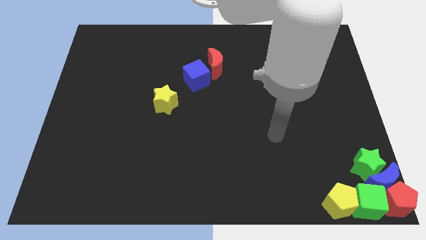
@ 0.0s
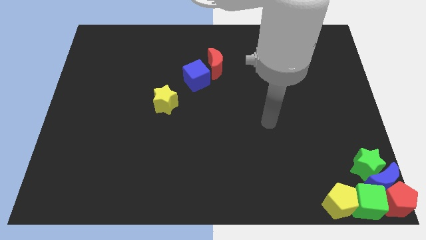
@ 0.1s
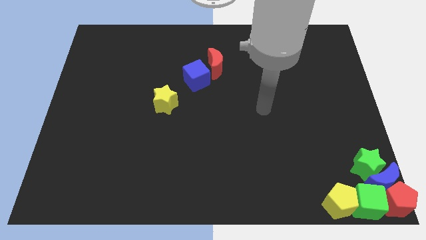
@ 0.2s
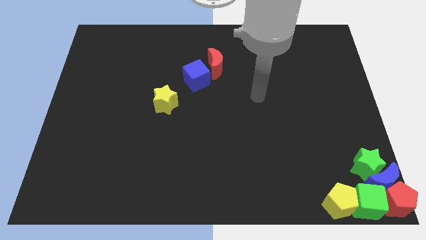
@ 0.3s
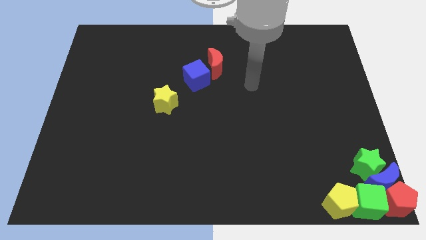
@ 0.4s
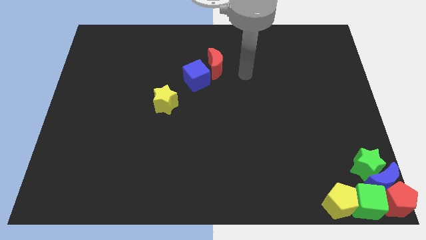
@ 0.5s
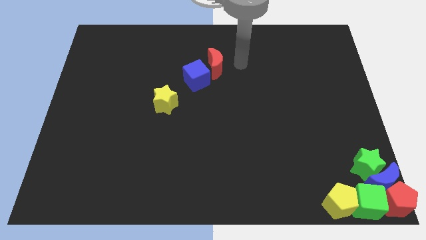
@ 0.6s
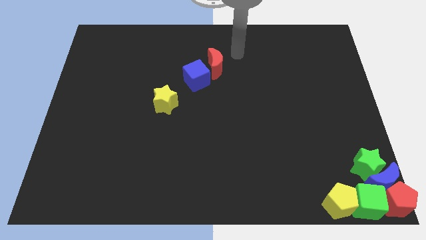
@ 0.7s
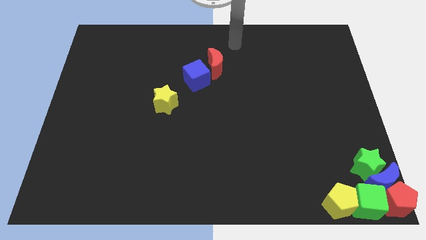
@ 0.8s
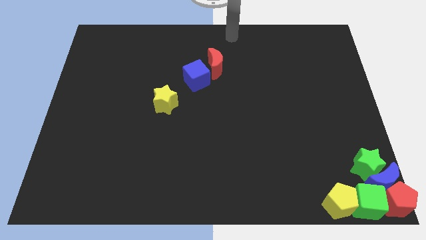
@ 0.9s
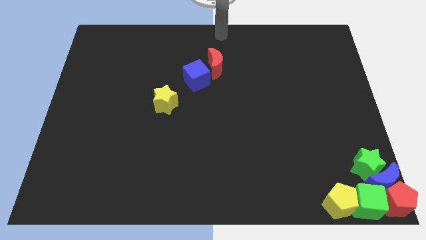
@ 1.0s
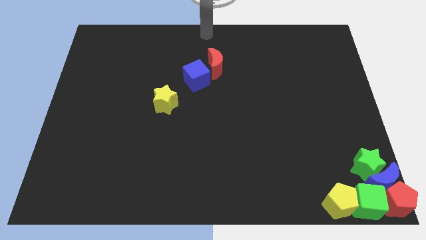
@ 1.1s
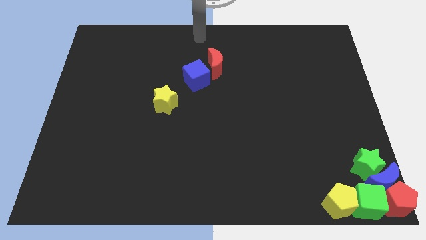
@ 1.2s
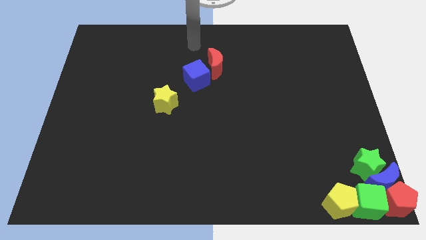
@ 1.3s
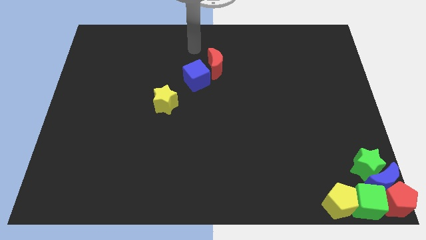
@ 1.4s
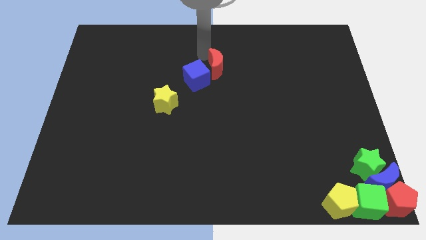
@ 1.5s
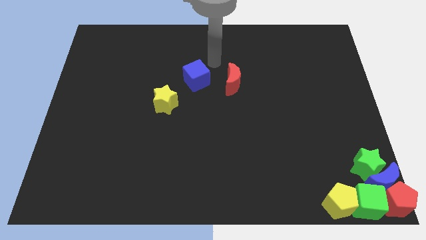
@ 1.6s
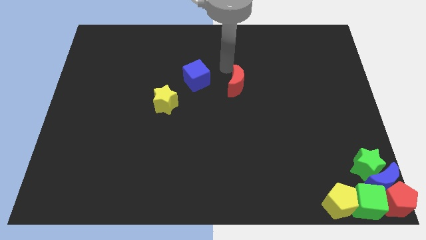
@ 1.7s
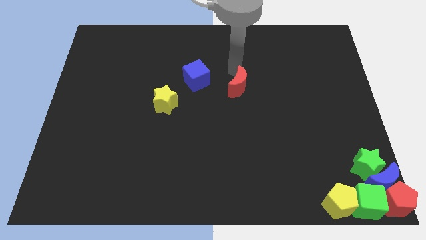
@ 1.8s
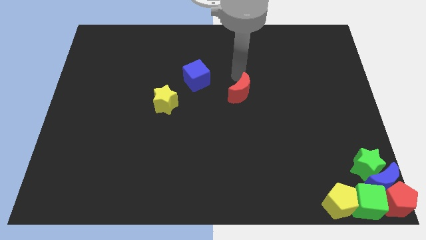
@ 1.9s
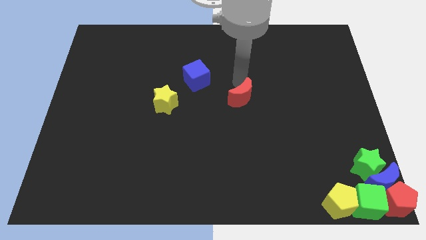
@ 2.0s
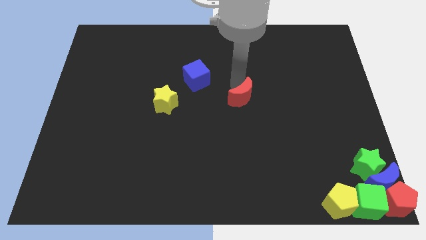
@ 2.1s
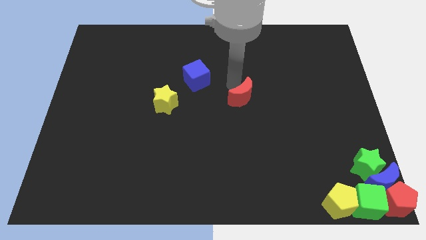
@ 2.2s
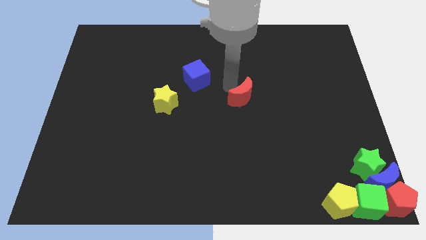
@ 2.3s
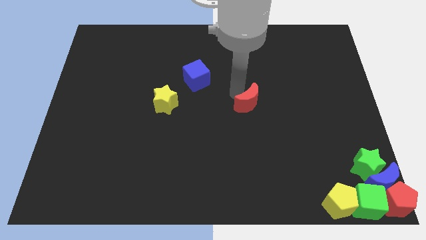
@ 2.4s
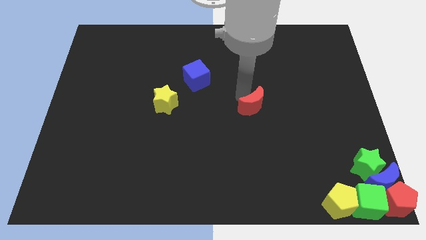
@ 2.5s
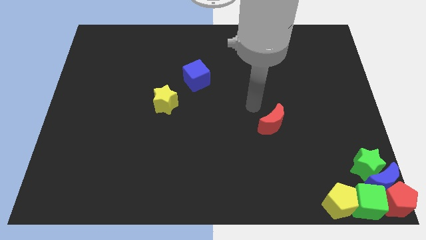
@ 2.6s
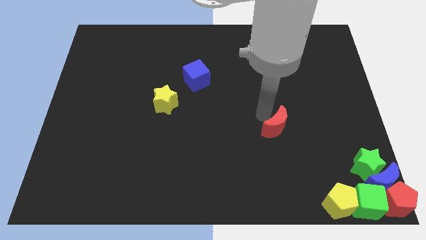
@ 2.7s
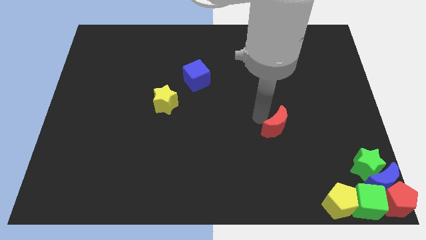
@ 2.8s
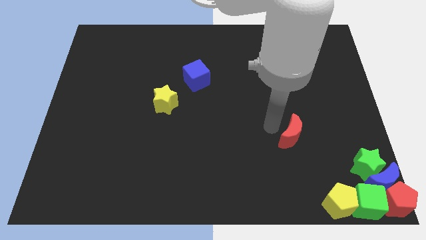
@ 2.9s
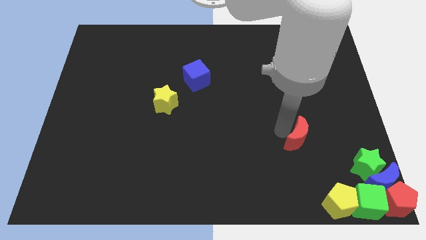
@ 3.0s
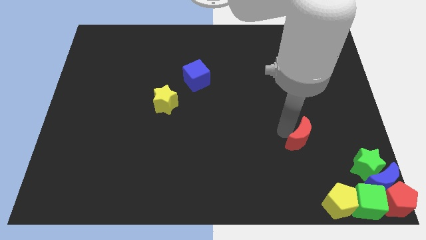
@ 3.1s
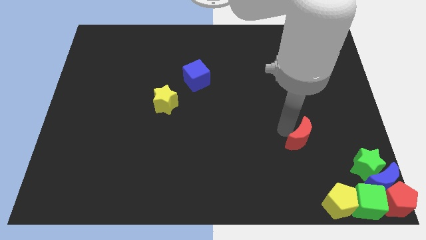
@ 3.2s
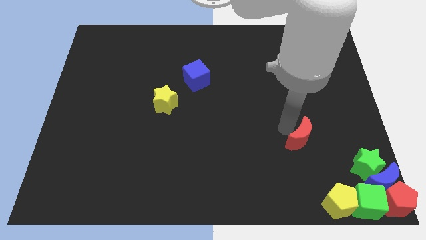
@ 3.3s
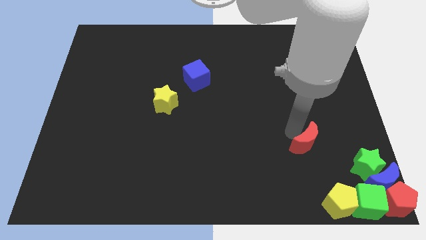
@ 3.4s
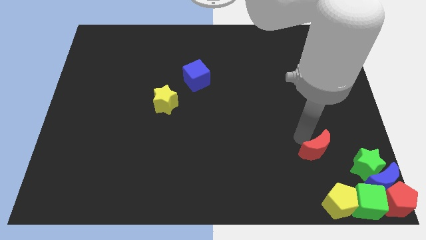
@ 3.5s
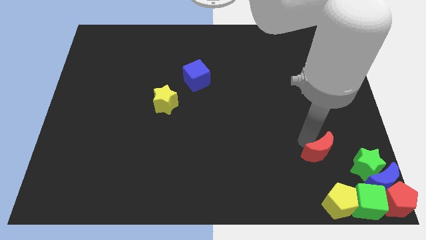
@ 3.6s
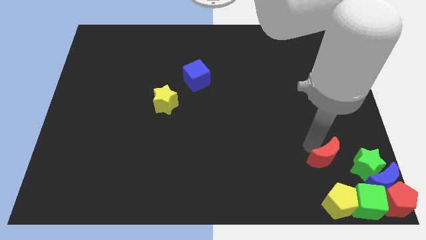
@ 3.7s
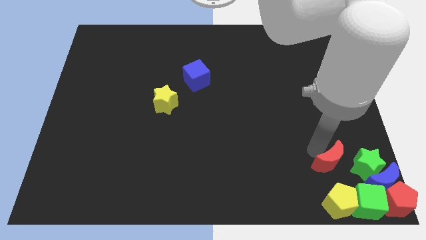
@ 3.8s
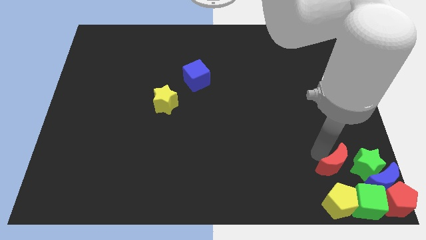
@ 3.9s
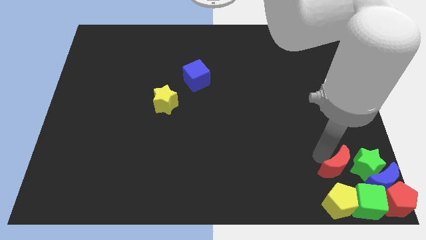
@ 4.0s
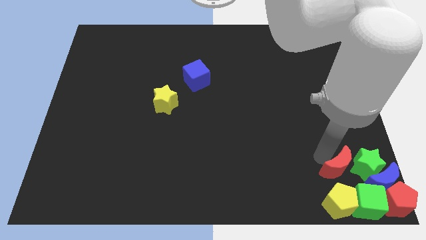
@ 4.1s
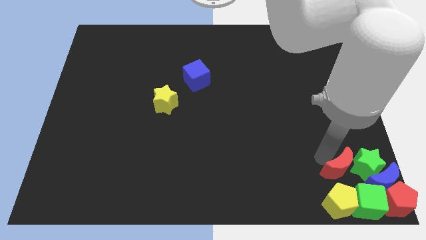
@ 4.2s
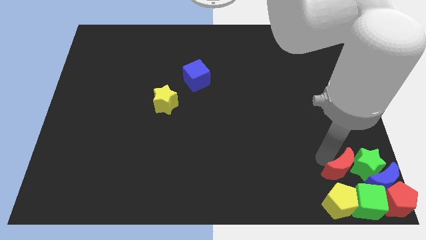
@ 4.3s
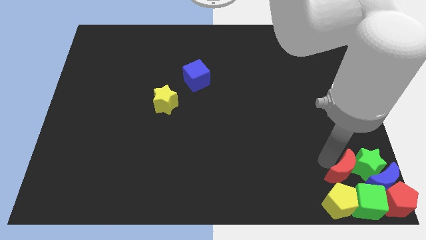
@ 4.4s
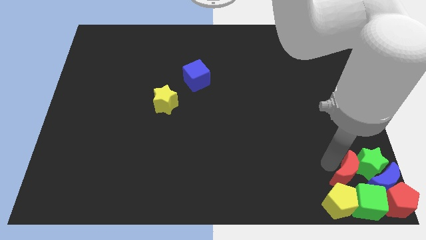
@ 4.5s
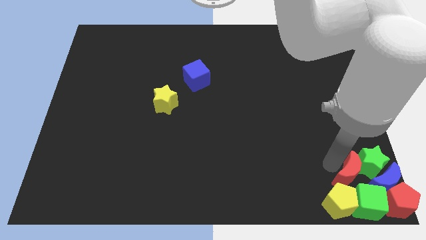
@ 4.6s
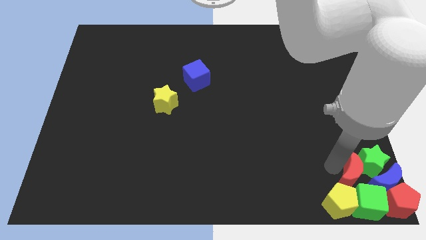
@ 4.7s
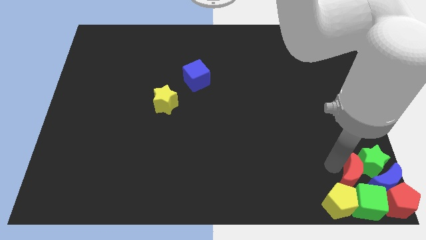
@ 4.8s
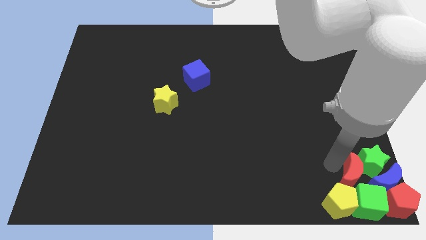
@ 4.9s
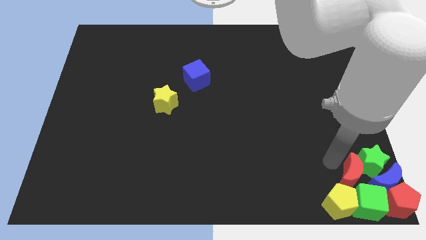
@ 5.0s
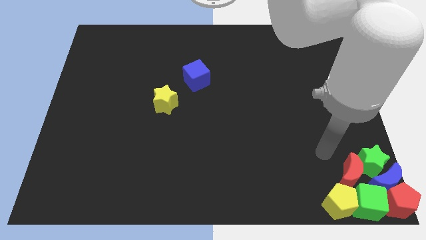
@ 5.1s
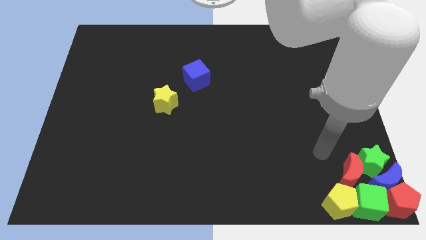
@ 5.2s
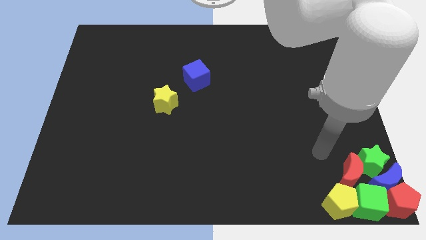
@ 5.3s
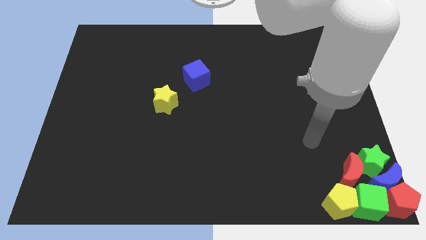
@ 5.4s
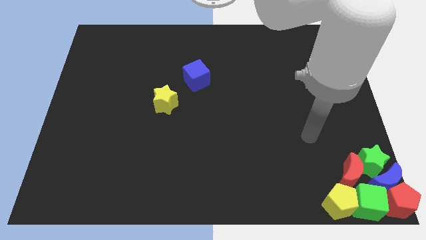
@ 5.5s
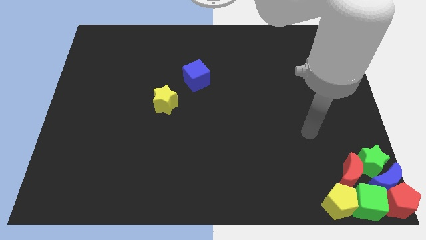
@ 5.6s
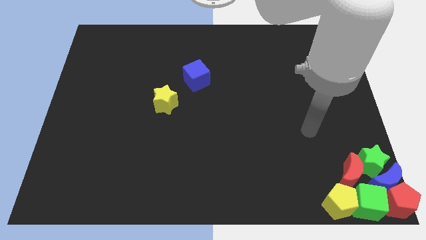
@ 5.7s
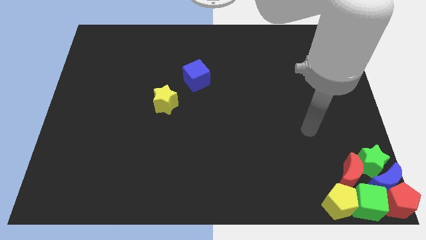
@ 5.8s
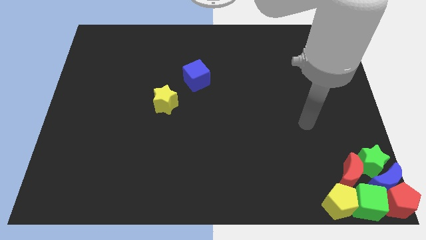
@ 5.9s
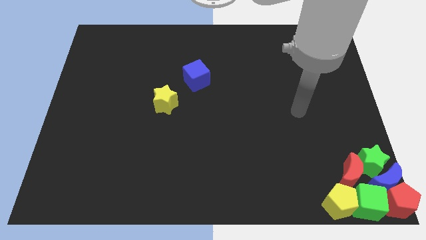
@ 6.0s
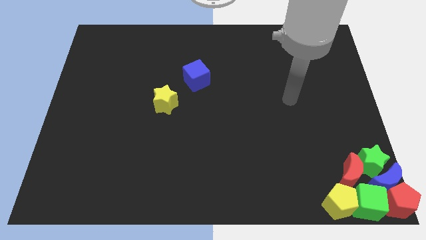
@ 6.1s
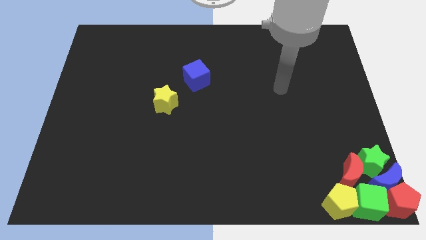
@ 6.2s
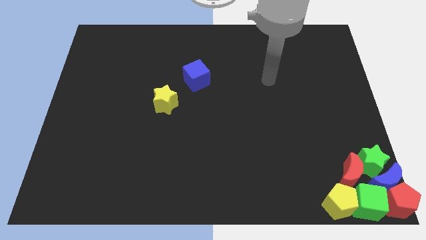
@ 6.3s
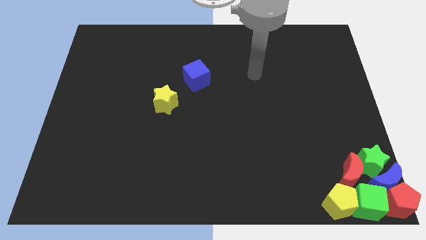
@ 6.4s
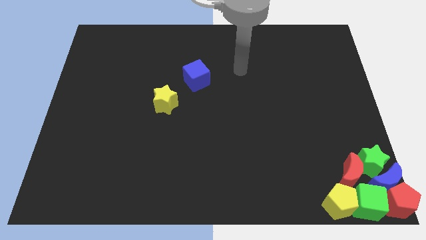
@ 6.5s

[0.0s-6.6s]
push the red moon into the group of blocks

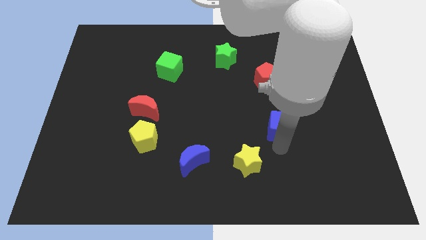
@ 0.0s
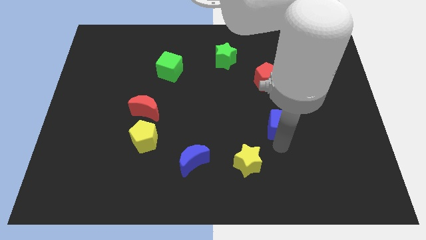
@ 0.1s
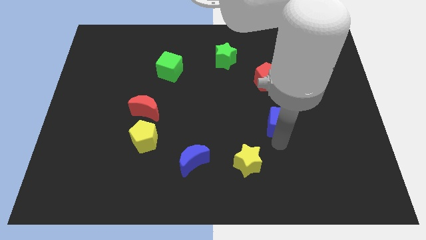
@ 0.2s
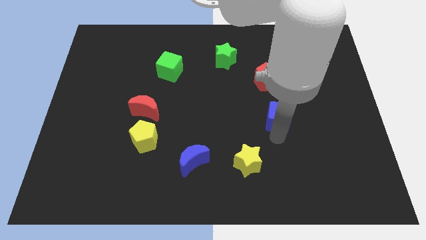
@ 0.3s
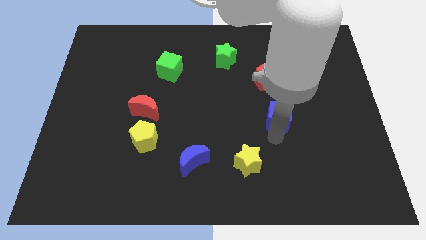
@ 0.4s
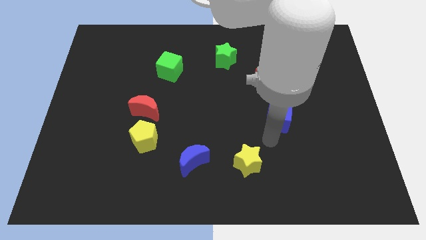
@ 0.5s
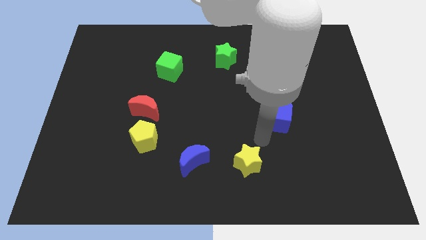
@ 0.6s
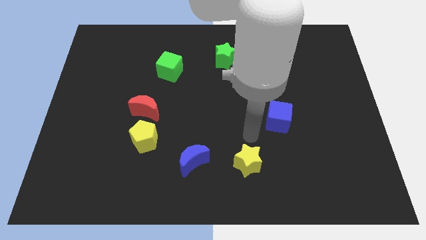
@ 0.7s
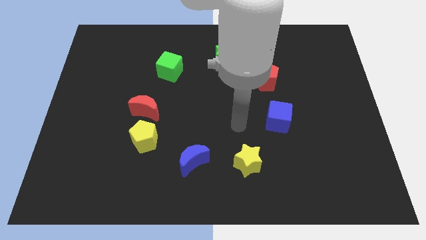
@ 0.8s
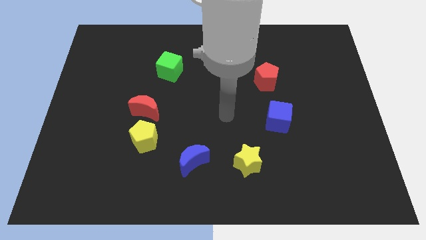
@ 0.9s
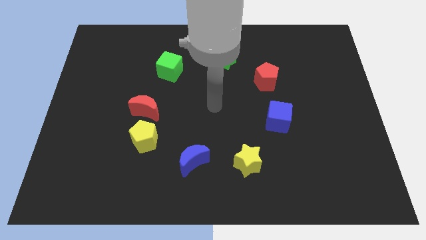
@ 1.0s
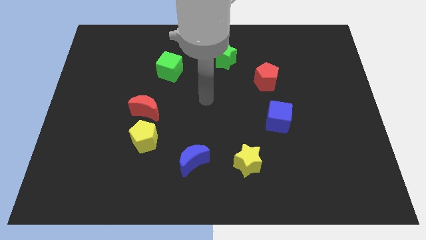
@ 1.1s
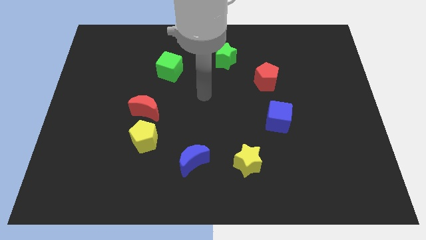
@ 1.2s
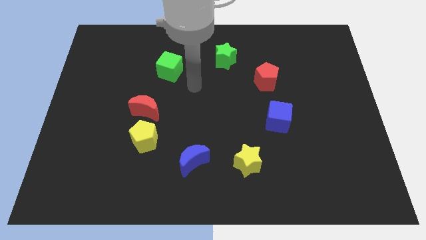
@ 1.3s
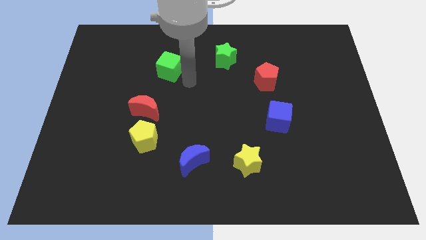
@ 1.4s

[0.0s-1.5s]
move the arm towards the right bottom of the green cube

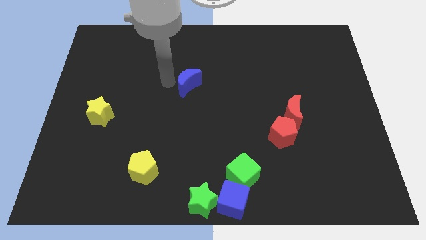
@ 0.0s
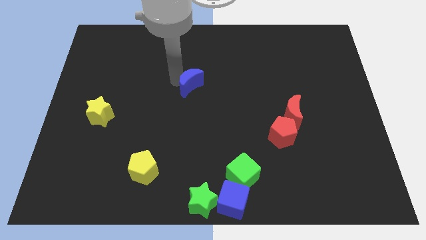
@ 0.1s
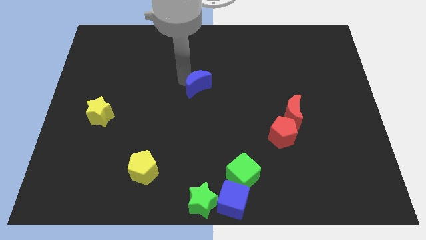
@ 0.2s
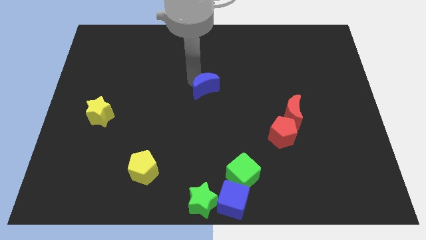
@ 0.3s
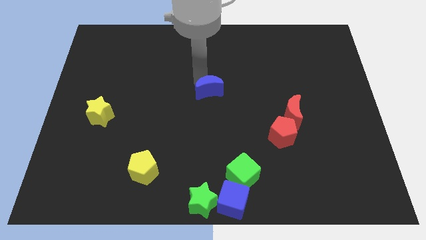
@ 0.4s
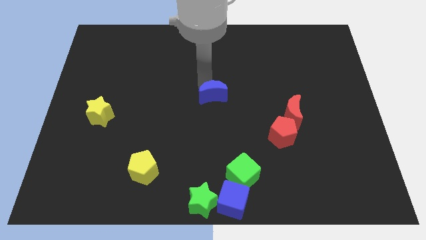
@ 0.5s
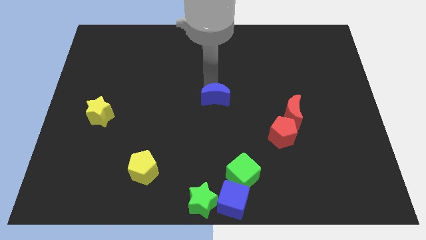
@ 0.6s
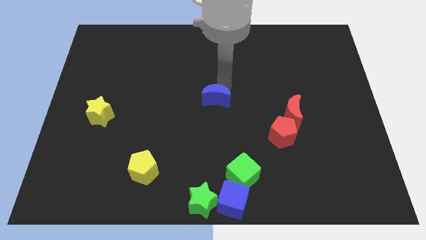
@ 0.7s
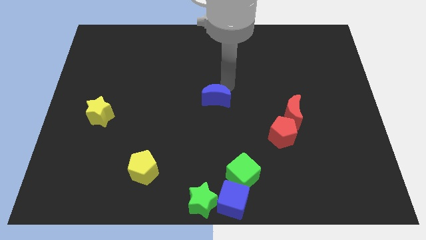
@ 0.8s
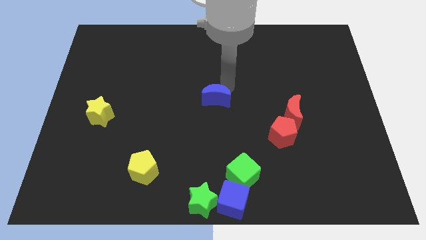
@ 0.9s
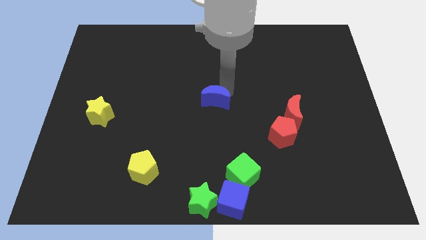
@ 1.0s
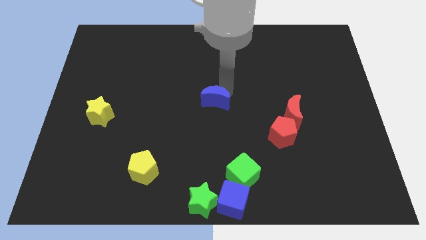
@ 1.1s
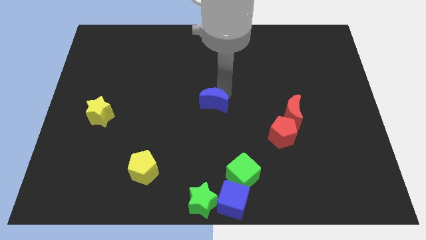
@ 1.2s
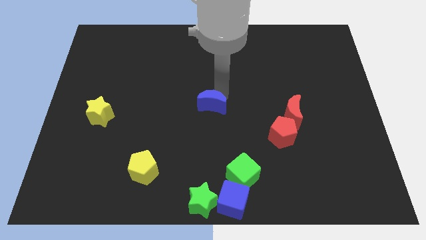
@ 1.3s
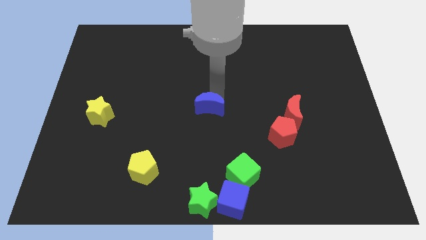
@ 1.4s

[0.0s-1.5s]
move the blue moon to the center of the board
